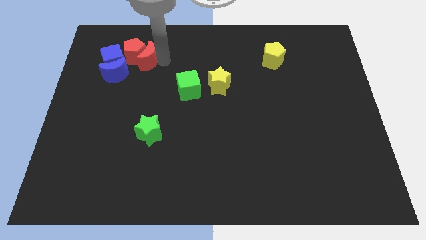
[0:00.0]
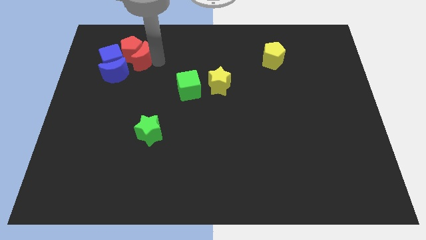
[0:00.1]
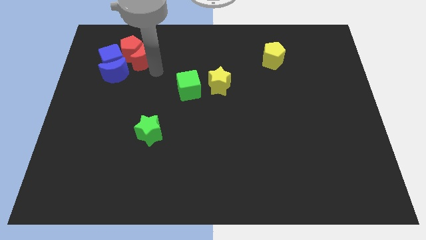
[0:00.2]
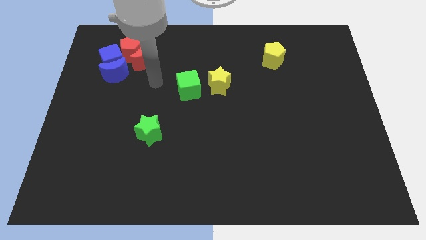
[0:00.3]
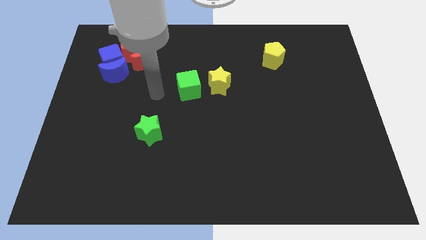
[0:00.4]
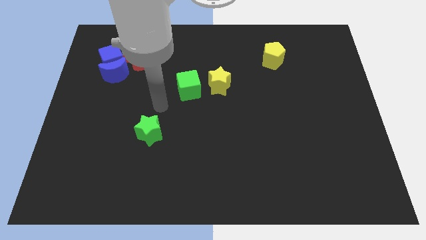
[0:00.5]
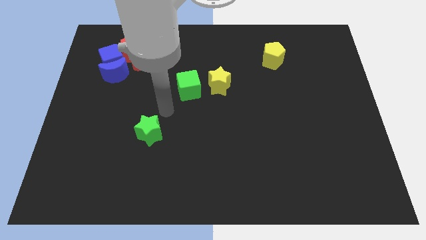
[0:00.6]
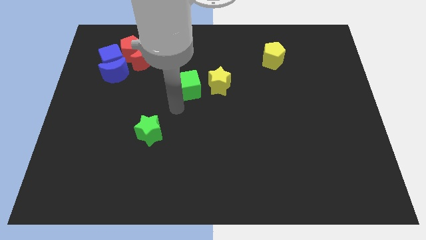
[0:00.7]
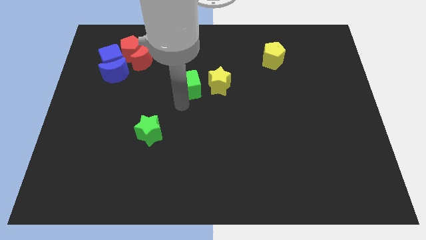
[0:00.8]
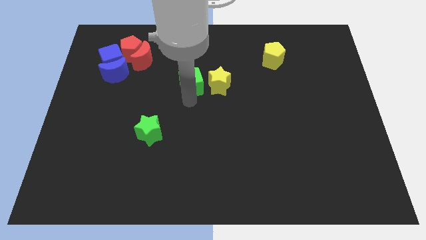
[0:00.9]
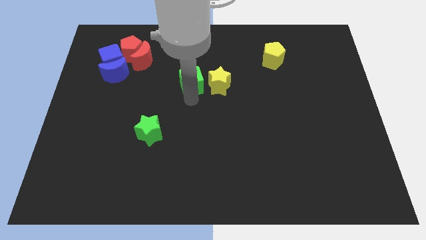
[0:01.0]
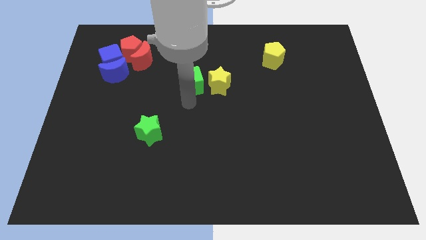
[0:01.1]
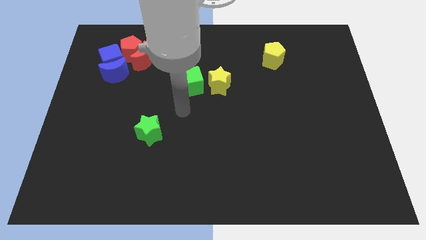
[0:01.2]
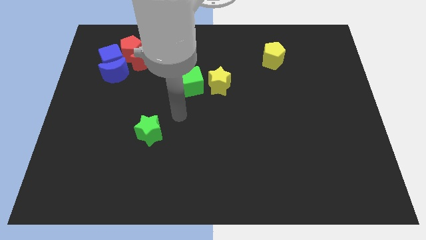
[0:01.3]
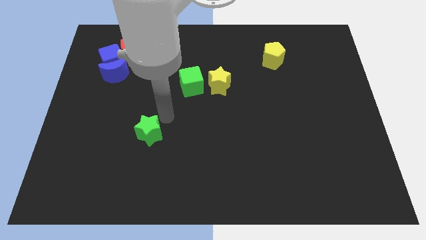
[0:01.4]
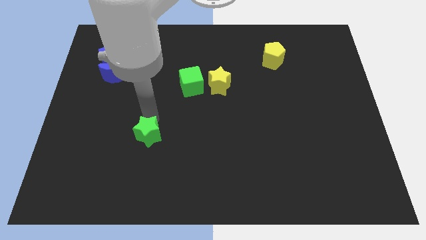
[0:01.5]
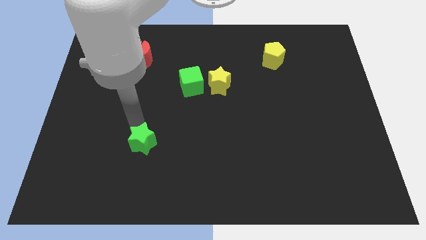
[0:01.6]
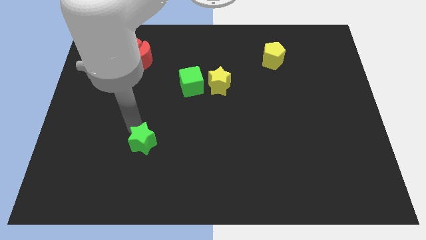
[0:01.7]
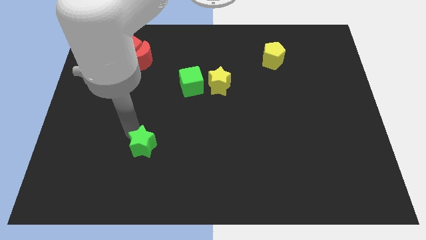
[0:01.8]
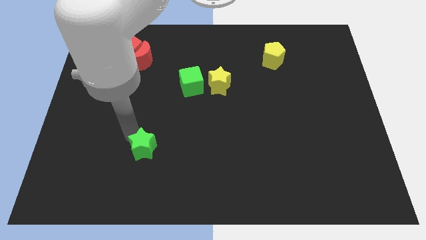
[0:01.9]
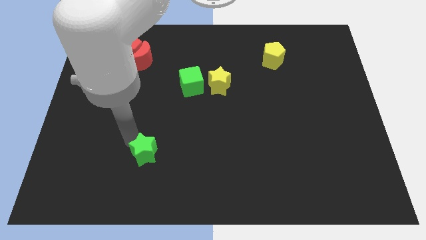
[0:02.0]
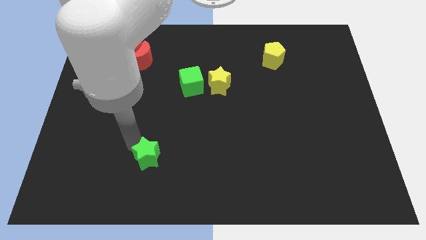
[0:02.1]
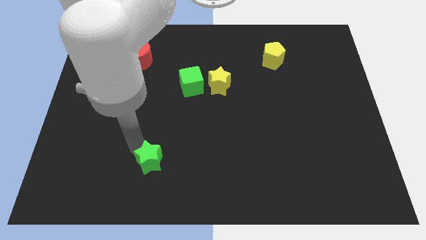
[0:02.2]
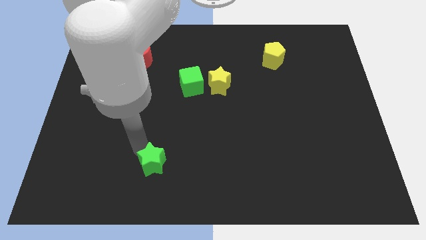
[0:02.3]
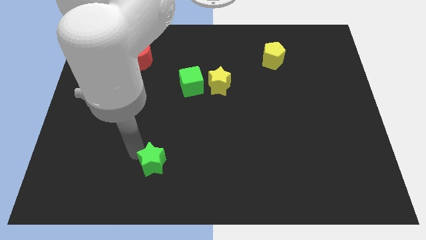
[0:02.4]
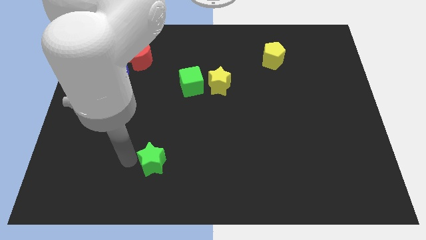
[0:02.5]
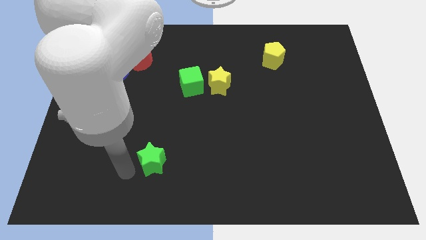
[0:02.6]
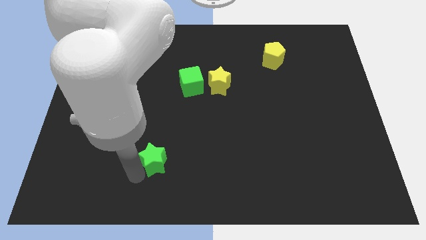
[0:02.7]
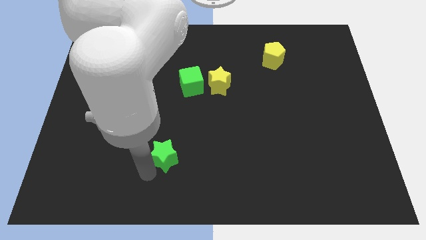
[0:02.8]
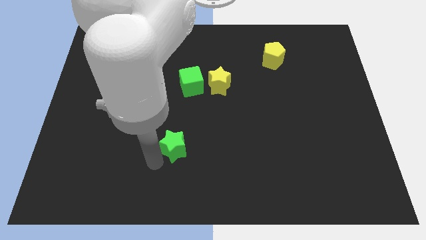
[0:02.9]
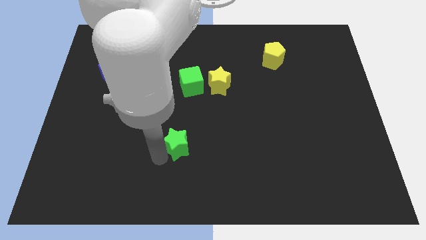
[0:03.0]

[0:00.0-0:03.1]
move the green star to the bottom left side of the green cube

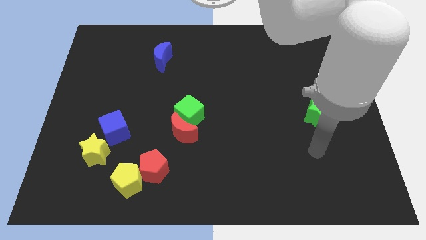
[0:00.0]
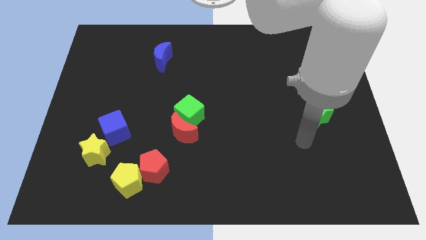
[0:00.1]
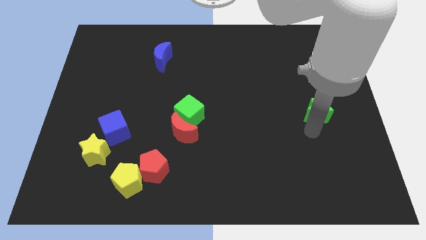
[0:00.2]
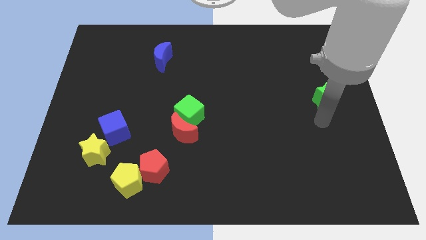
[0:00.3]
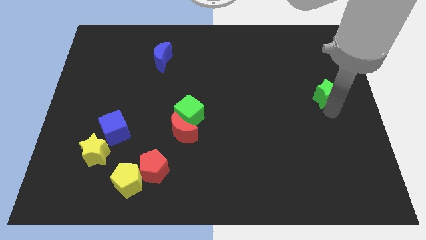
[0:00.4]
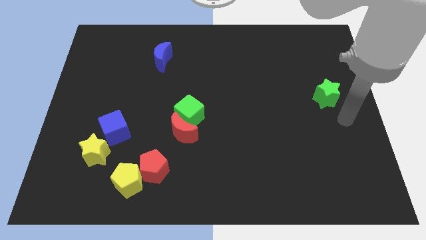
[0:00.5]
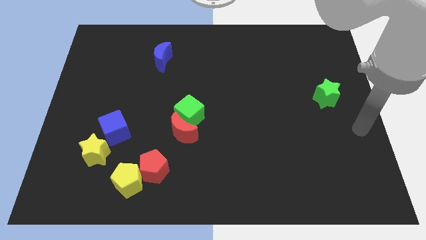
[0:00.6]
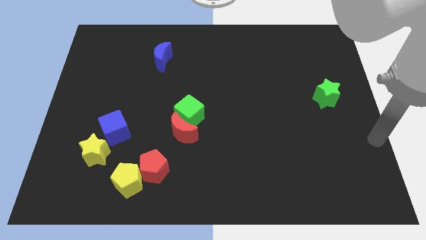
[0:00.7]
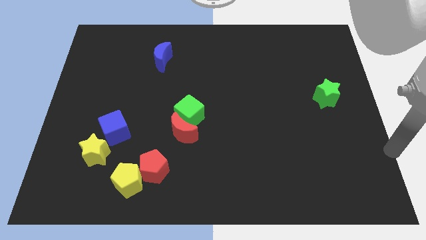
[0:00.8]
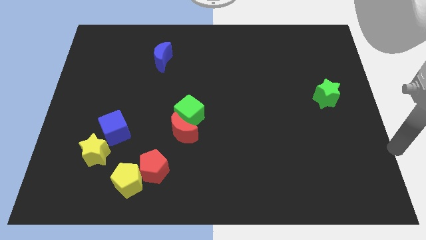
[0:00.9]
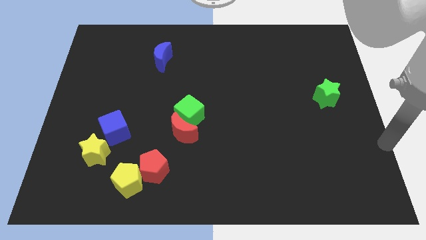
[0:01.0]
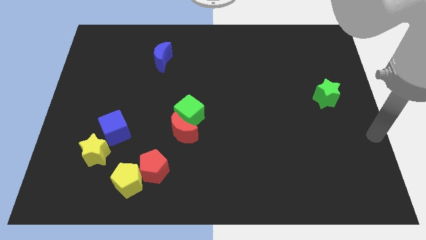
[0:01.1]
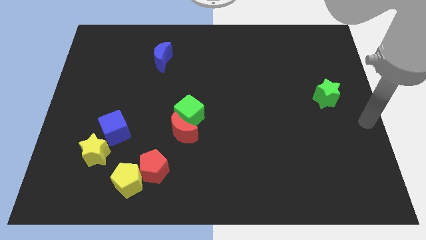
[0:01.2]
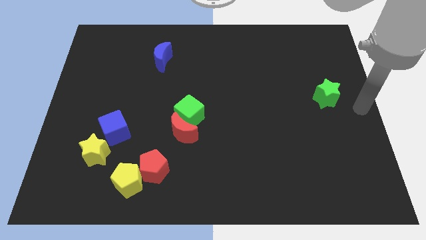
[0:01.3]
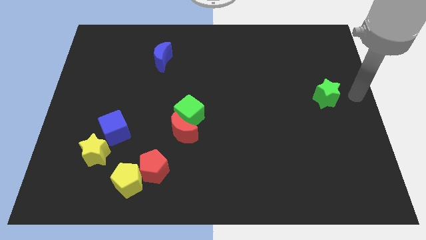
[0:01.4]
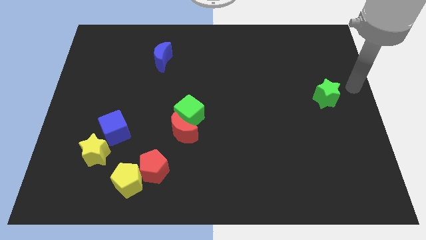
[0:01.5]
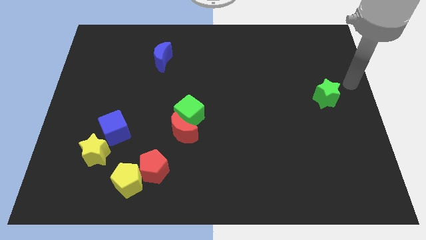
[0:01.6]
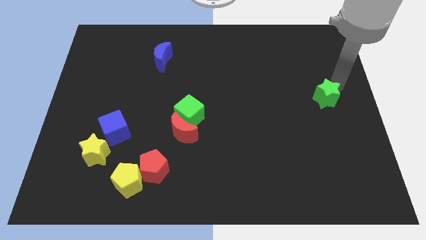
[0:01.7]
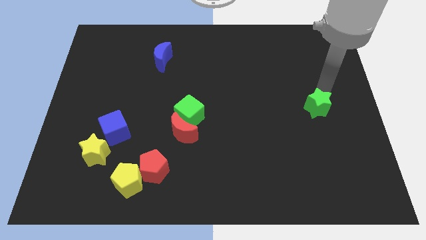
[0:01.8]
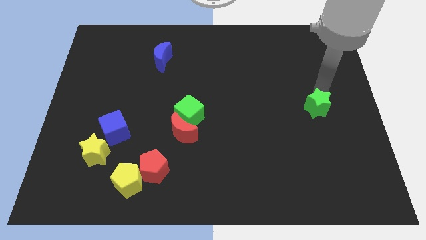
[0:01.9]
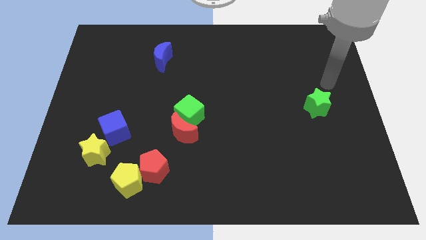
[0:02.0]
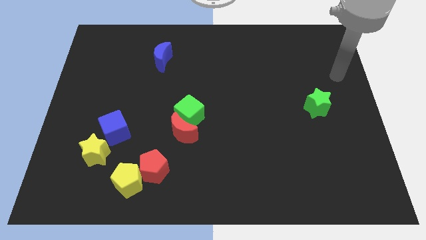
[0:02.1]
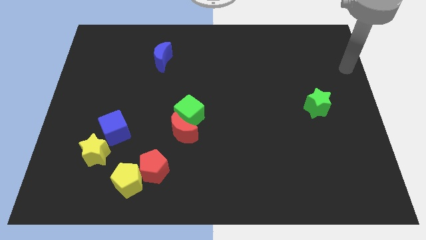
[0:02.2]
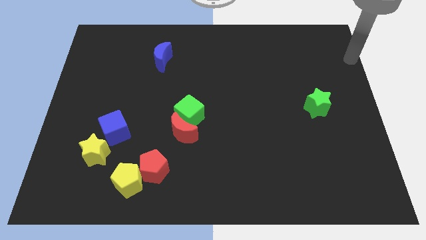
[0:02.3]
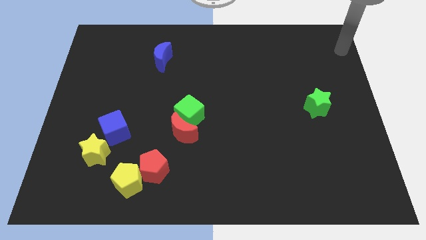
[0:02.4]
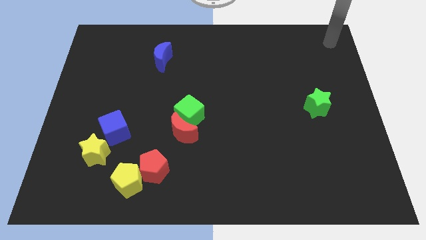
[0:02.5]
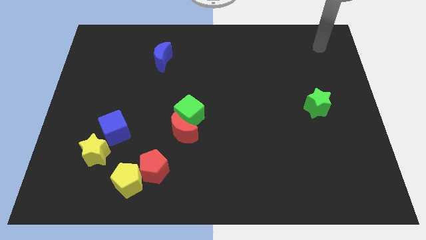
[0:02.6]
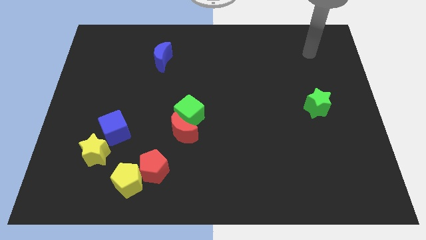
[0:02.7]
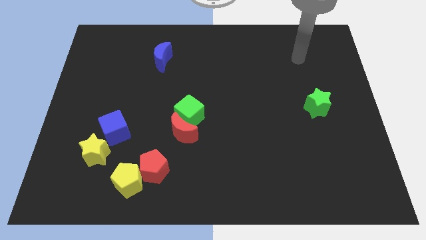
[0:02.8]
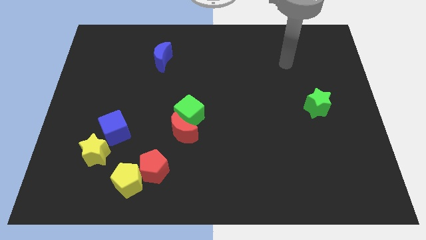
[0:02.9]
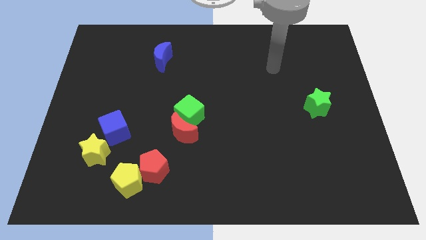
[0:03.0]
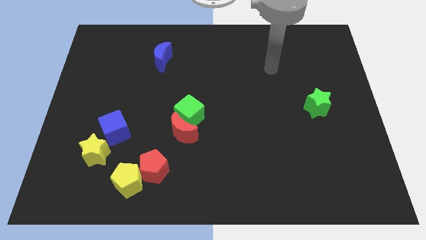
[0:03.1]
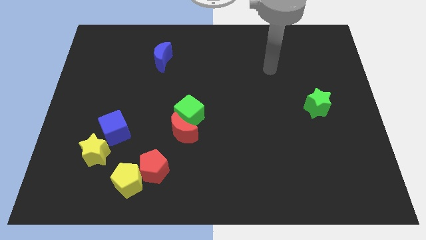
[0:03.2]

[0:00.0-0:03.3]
push the green star slightly to the bottom

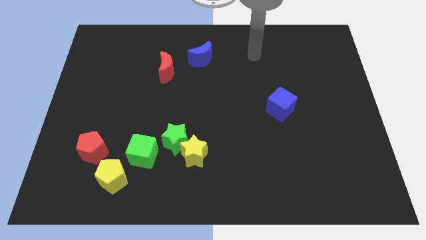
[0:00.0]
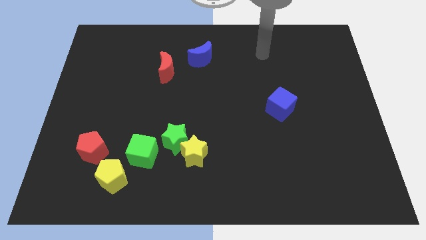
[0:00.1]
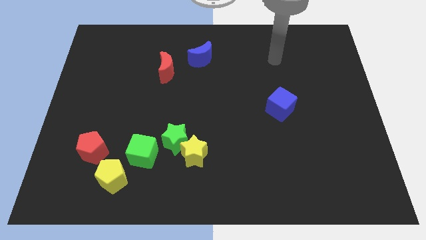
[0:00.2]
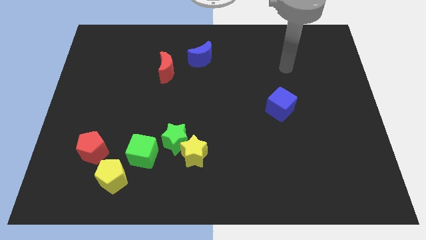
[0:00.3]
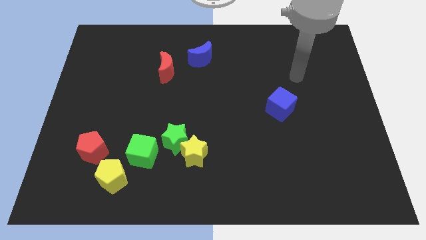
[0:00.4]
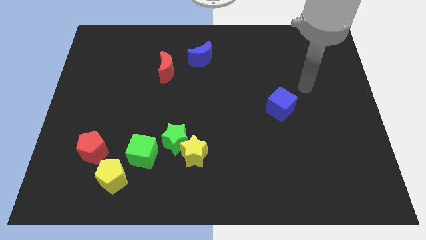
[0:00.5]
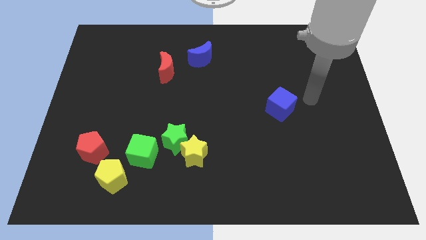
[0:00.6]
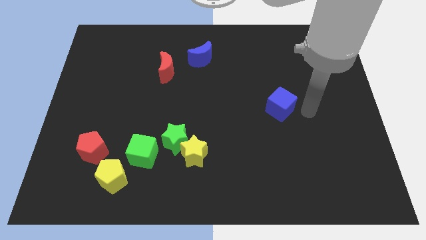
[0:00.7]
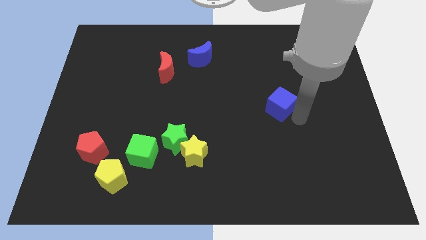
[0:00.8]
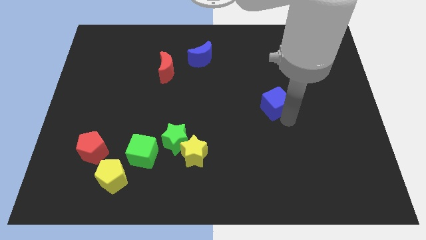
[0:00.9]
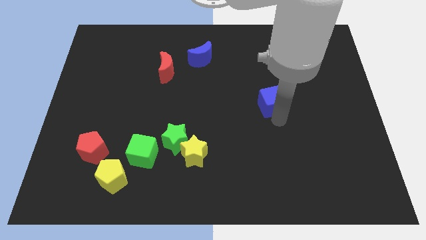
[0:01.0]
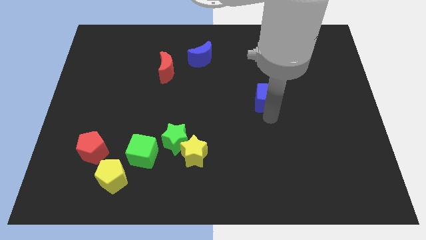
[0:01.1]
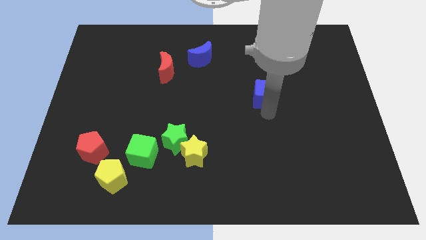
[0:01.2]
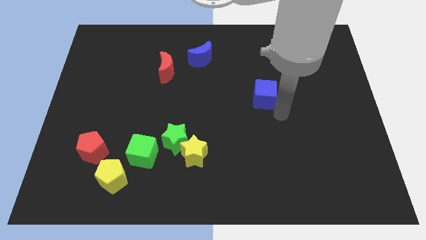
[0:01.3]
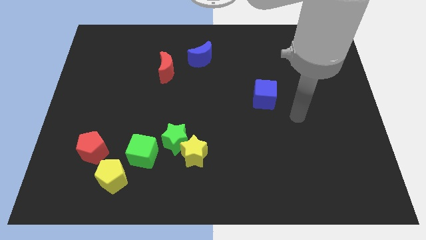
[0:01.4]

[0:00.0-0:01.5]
move the blue cube to the top of the board

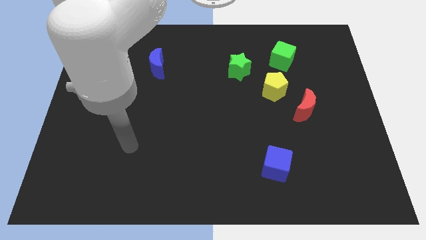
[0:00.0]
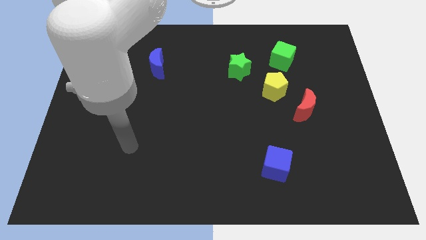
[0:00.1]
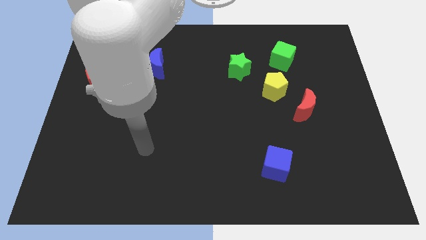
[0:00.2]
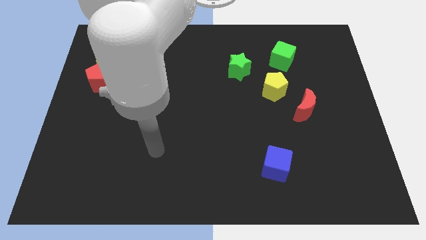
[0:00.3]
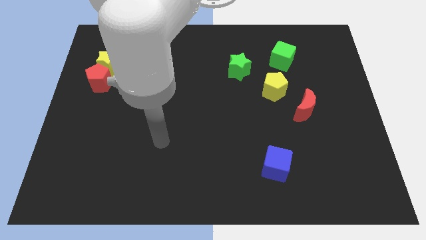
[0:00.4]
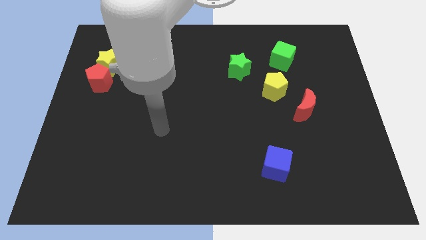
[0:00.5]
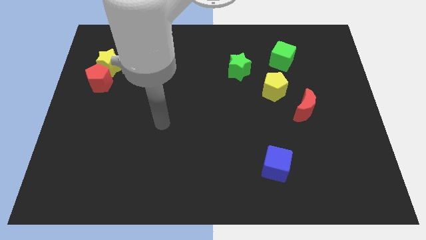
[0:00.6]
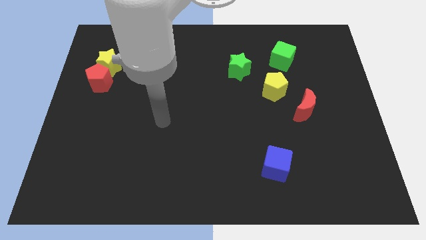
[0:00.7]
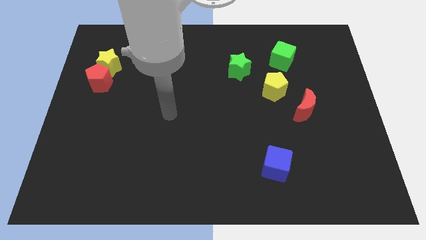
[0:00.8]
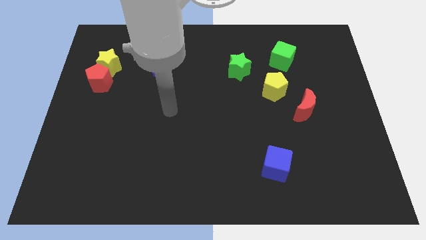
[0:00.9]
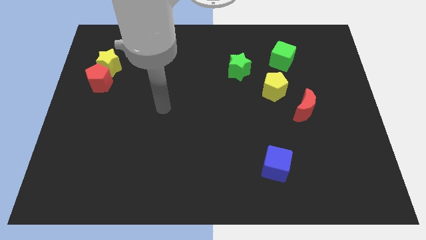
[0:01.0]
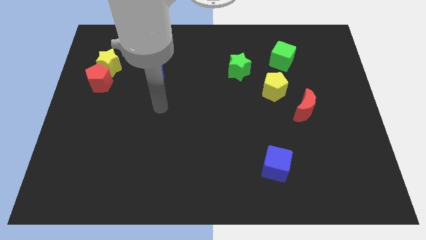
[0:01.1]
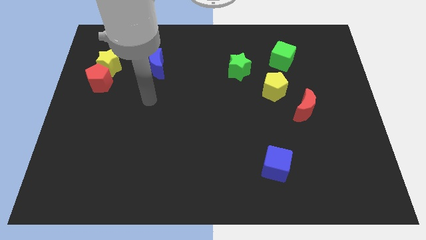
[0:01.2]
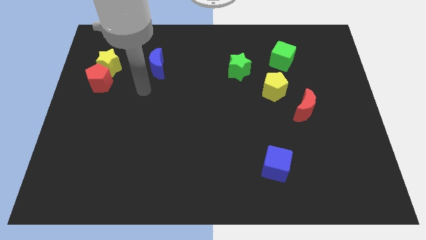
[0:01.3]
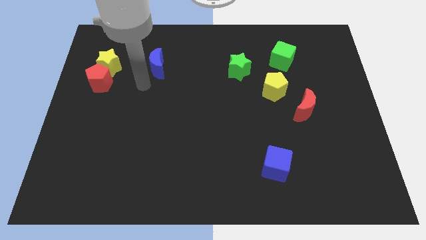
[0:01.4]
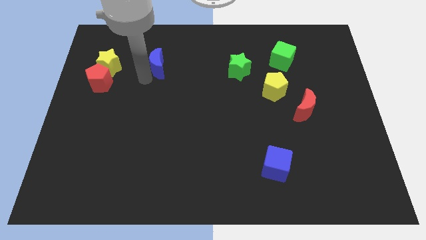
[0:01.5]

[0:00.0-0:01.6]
point your arm at the bottom left side of blue moon
